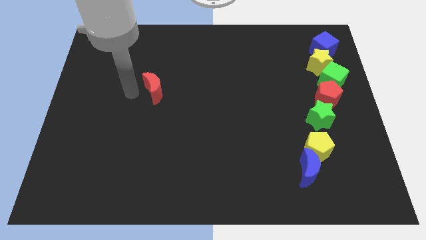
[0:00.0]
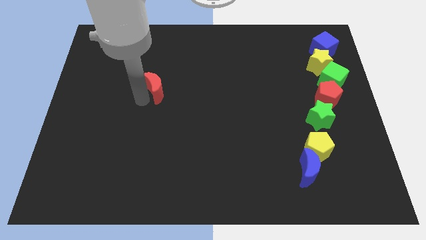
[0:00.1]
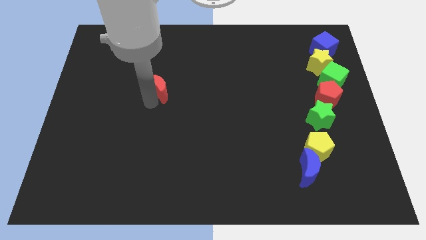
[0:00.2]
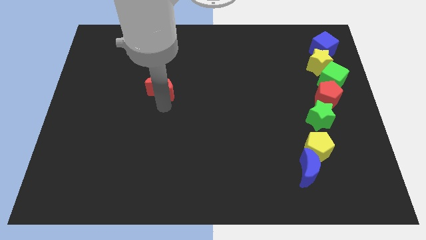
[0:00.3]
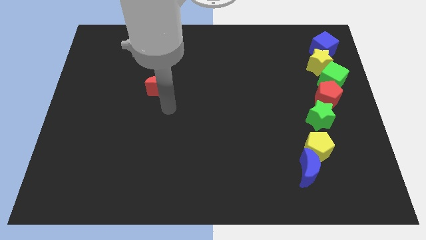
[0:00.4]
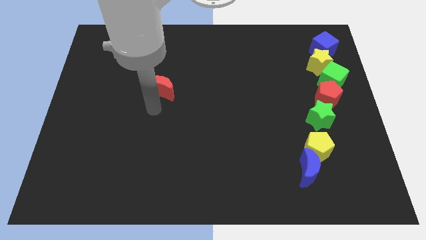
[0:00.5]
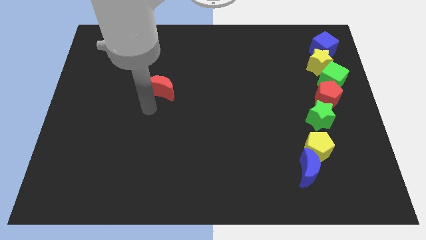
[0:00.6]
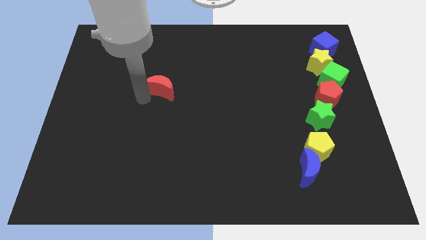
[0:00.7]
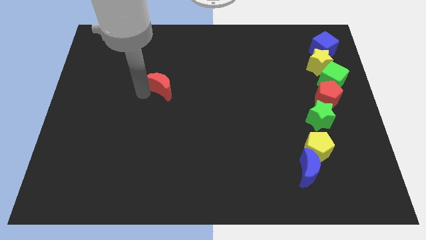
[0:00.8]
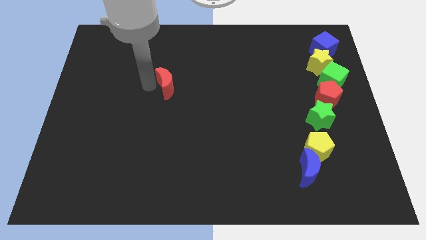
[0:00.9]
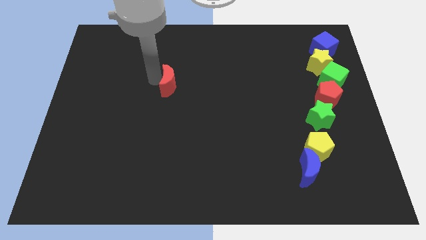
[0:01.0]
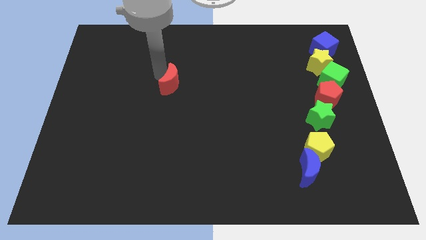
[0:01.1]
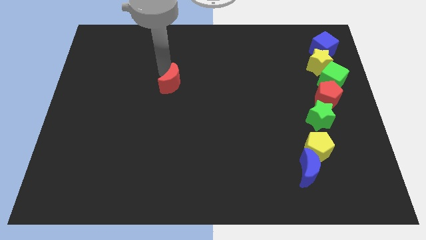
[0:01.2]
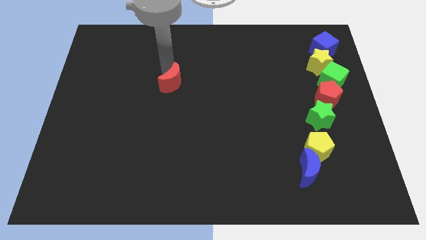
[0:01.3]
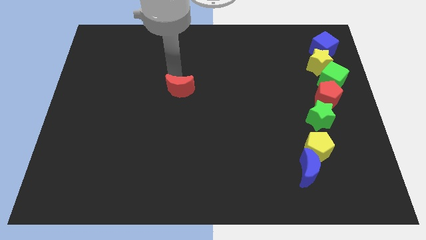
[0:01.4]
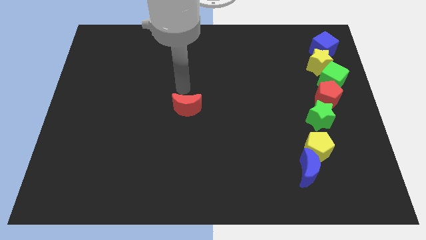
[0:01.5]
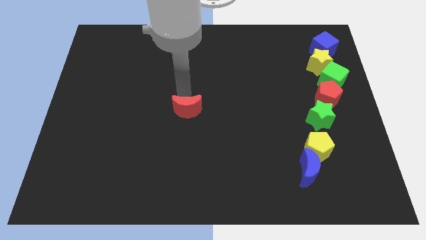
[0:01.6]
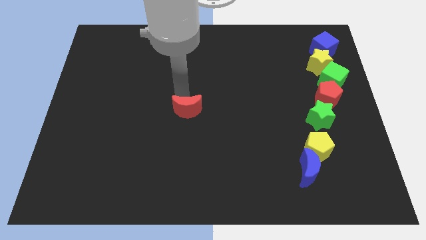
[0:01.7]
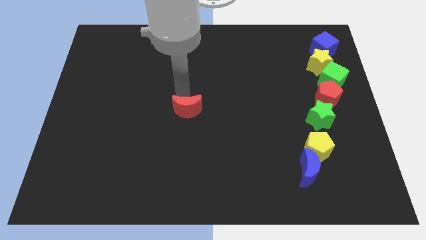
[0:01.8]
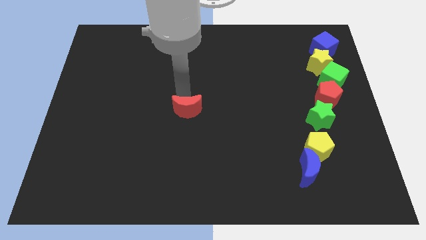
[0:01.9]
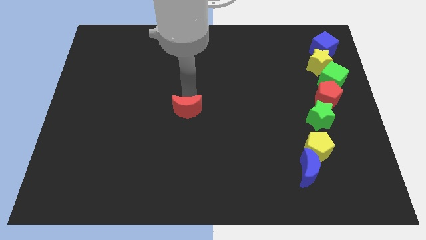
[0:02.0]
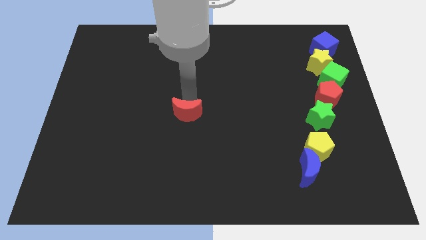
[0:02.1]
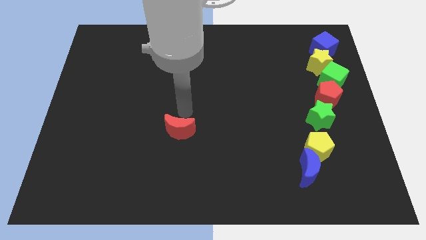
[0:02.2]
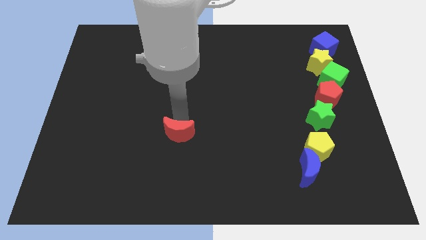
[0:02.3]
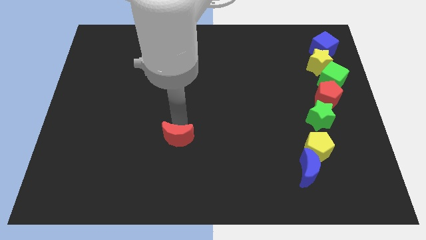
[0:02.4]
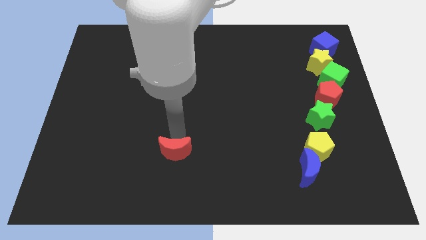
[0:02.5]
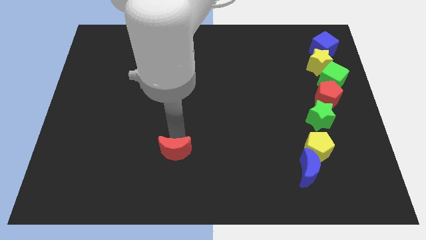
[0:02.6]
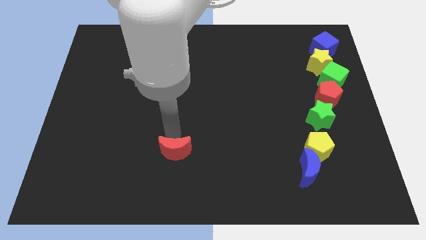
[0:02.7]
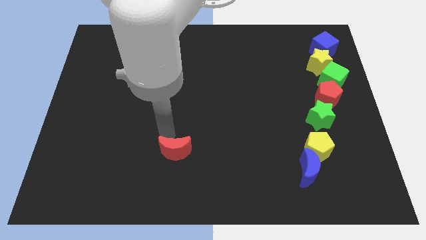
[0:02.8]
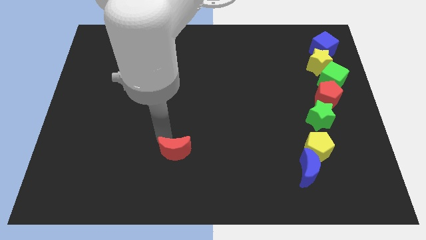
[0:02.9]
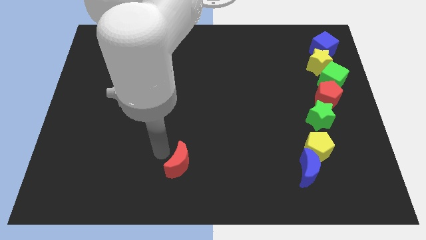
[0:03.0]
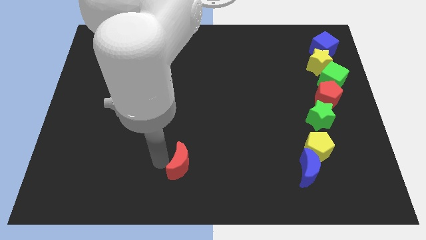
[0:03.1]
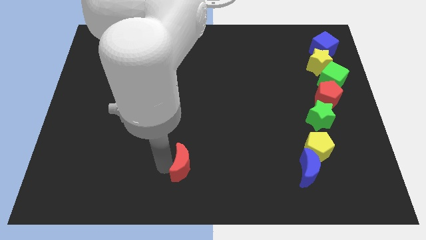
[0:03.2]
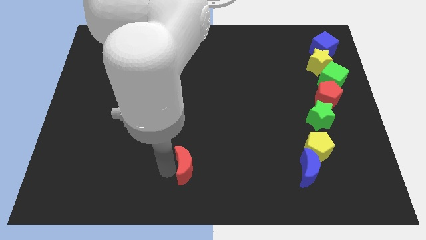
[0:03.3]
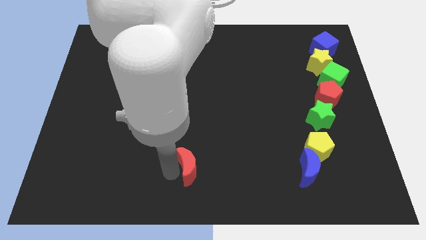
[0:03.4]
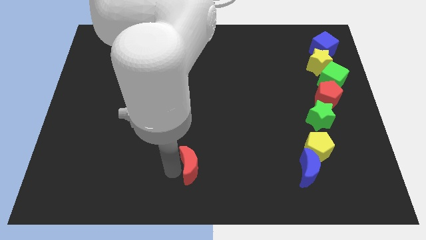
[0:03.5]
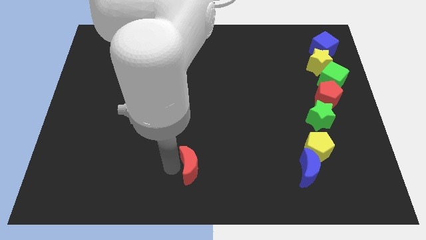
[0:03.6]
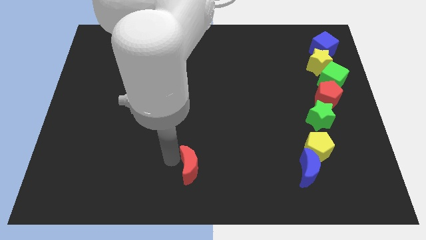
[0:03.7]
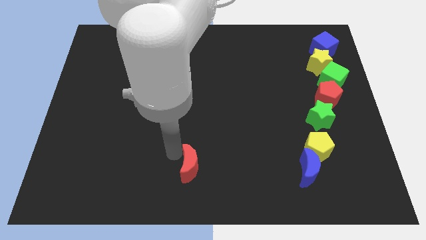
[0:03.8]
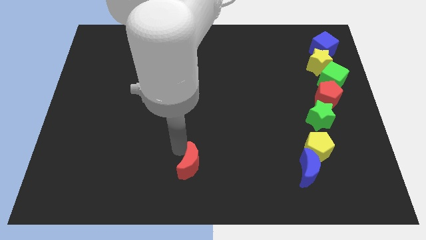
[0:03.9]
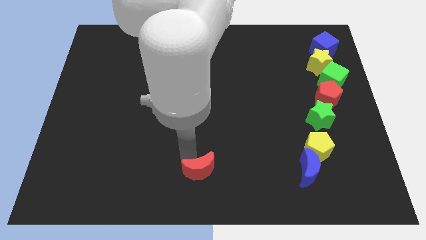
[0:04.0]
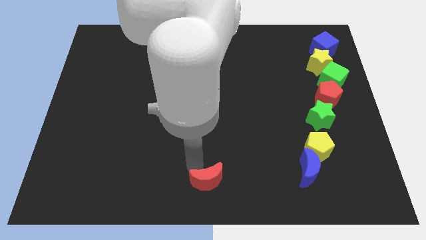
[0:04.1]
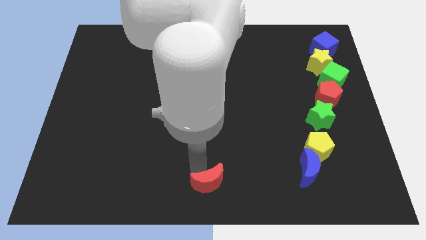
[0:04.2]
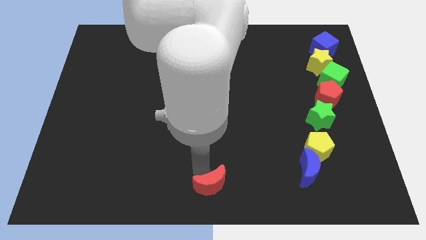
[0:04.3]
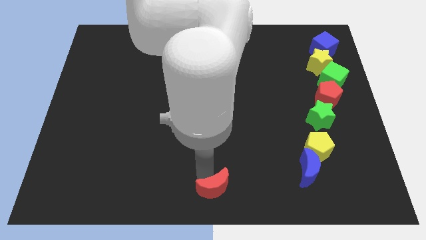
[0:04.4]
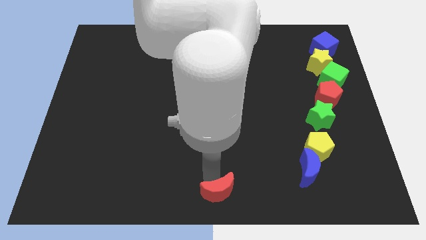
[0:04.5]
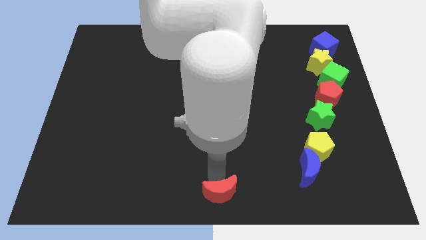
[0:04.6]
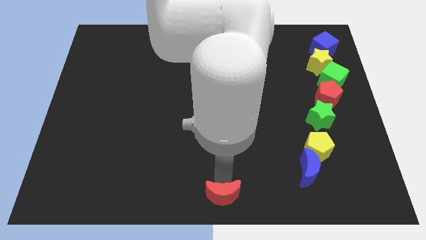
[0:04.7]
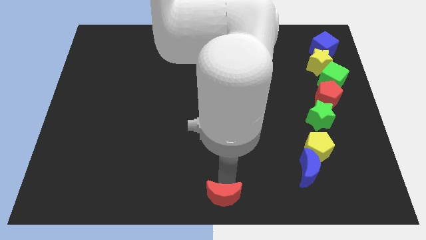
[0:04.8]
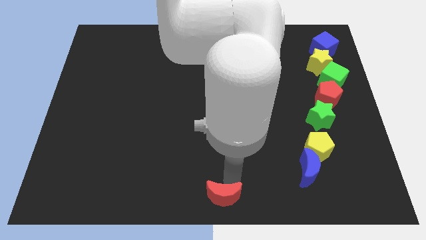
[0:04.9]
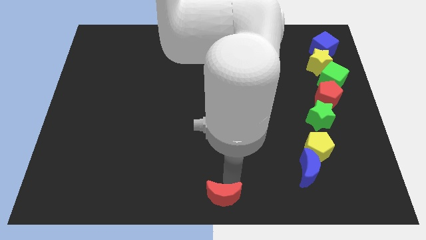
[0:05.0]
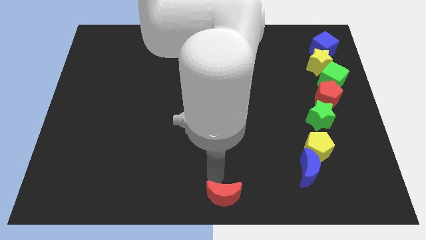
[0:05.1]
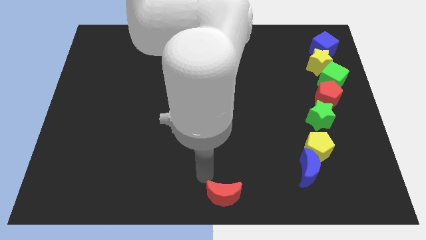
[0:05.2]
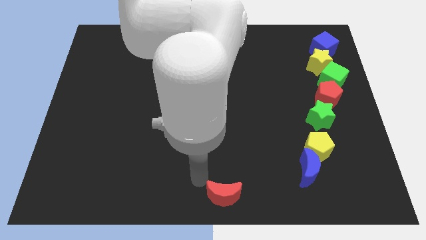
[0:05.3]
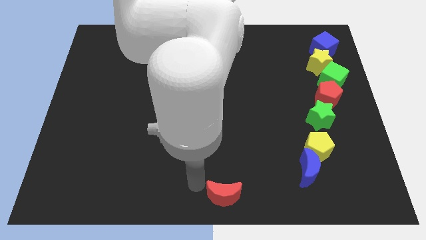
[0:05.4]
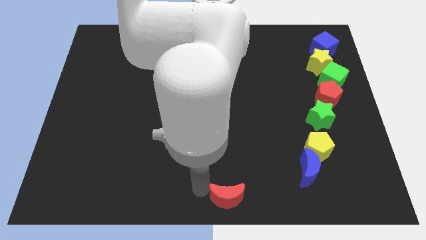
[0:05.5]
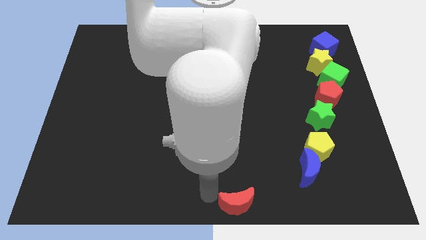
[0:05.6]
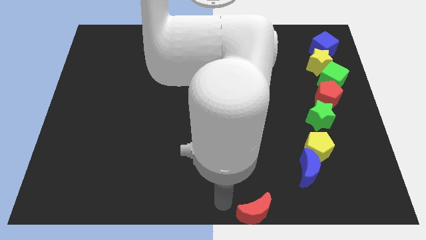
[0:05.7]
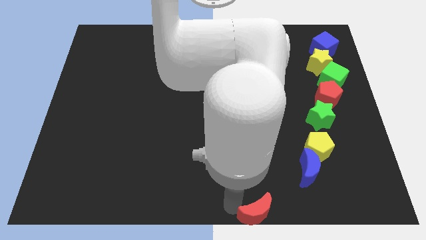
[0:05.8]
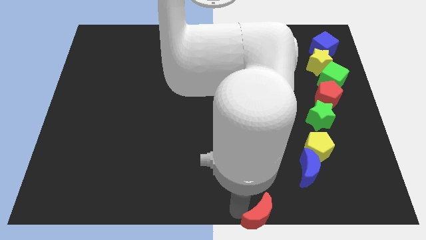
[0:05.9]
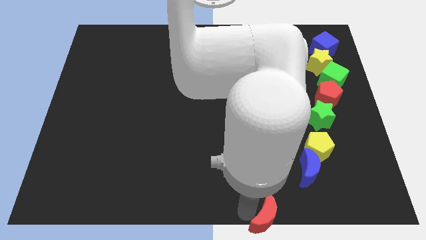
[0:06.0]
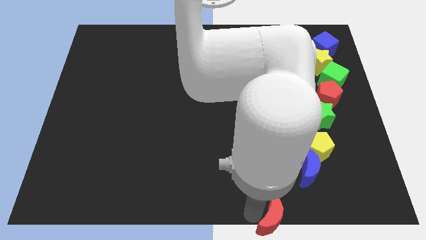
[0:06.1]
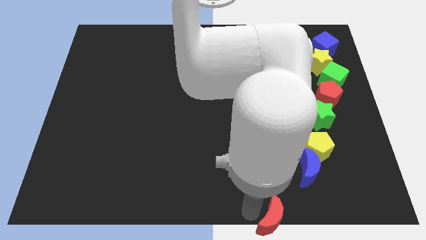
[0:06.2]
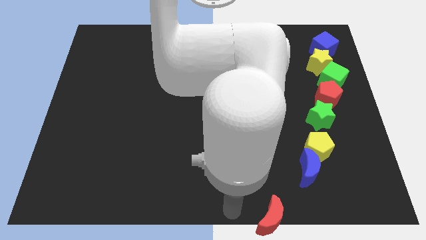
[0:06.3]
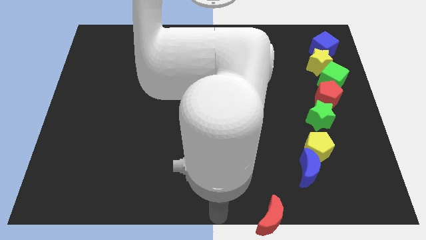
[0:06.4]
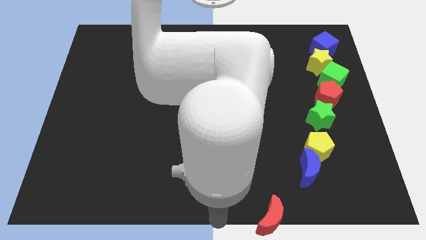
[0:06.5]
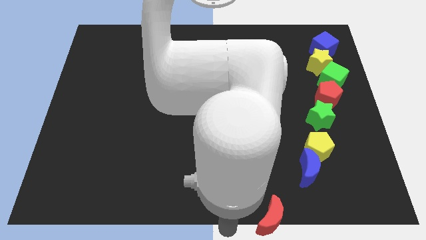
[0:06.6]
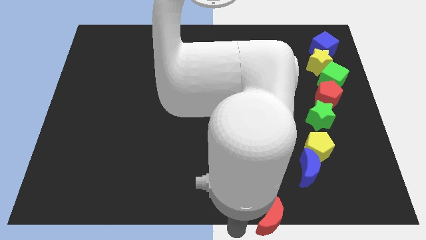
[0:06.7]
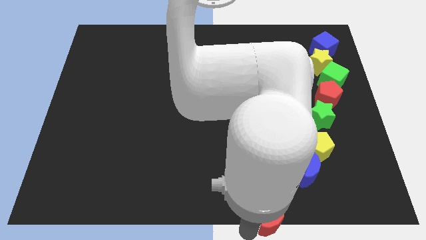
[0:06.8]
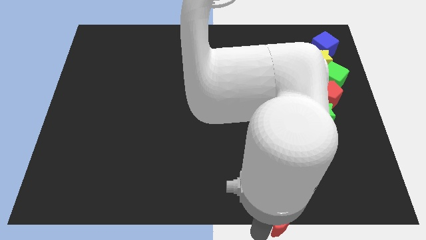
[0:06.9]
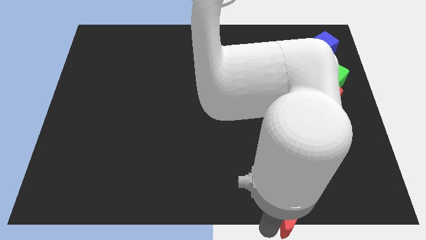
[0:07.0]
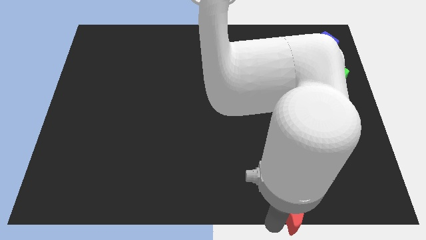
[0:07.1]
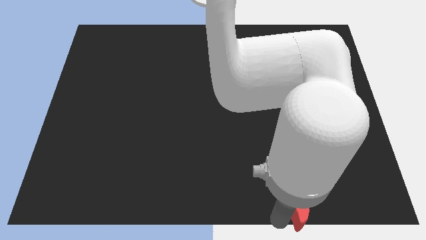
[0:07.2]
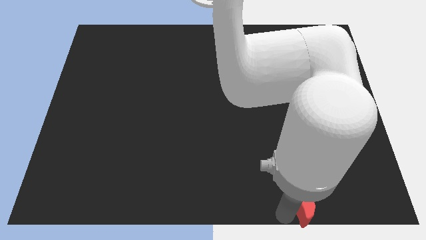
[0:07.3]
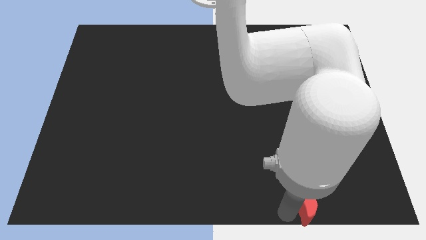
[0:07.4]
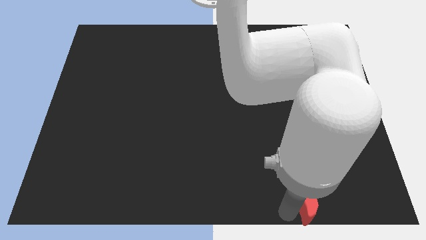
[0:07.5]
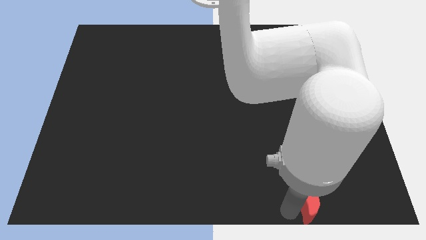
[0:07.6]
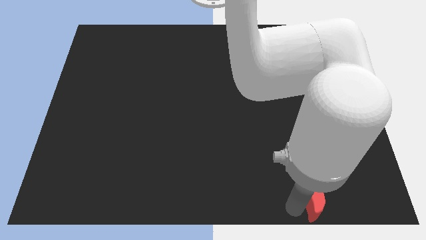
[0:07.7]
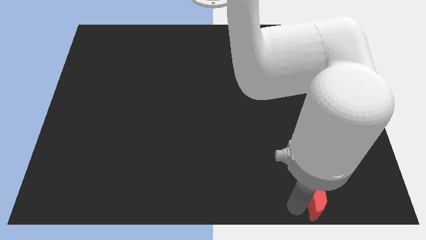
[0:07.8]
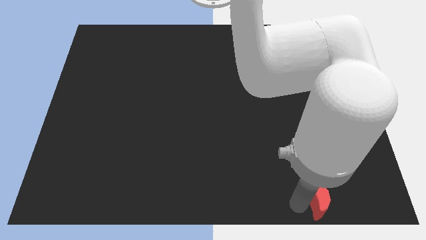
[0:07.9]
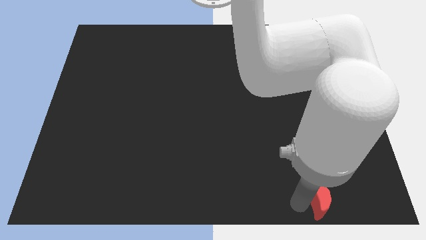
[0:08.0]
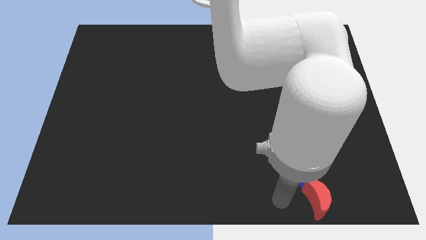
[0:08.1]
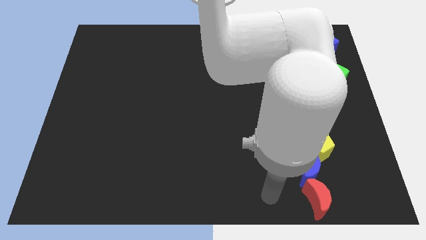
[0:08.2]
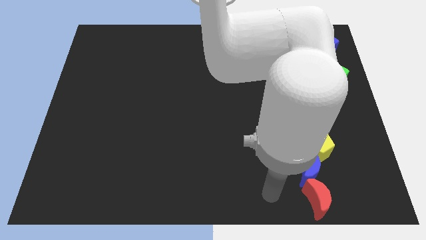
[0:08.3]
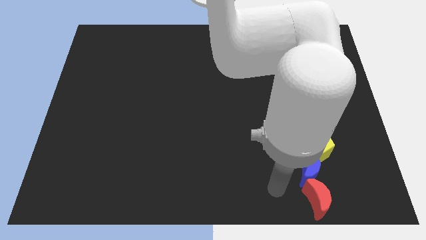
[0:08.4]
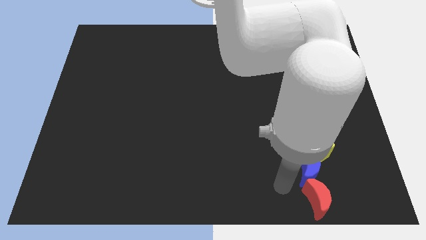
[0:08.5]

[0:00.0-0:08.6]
push the red moon to the bottom right side of the board

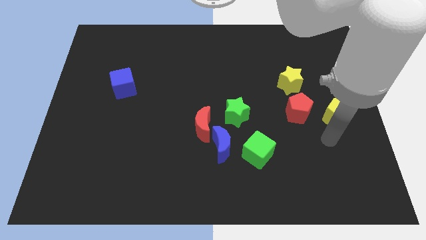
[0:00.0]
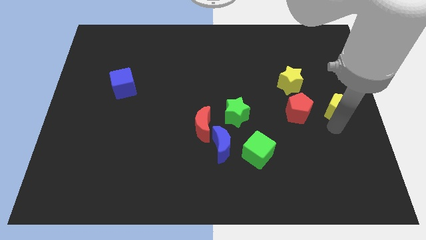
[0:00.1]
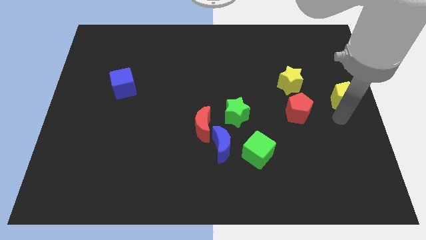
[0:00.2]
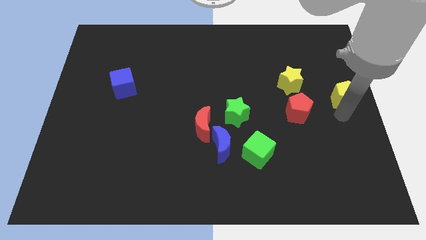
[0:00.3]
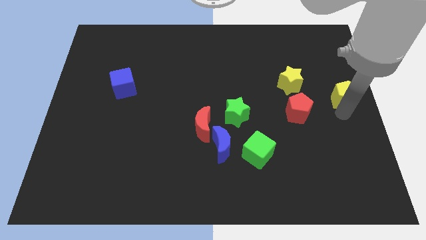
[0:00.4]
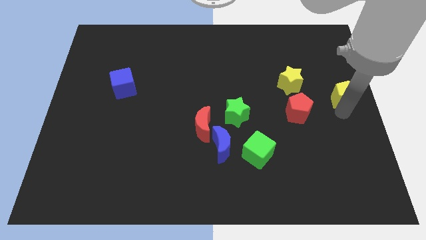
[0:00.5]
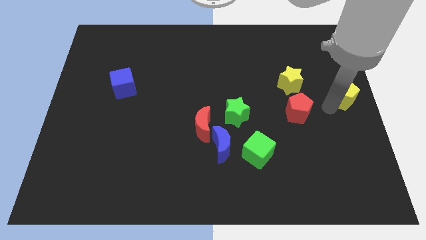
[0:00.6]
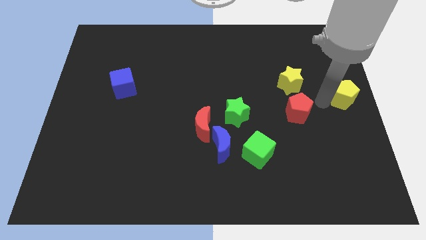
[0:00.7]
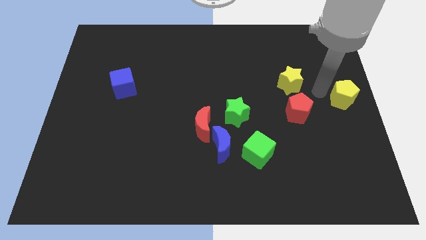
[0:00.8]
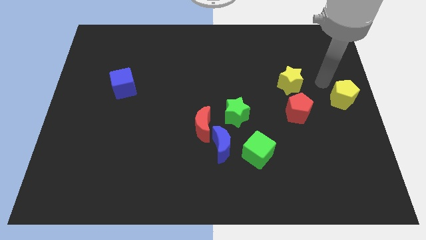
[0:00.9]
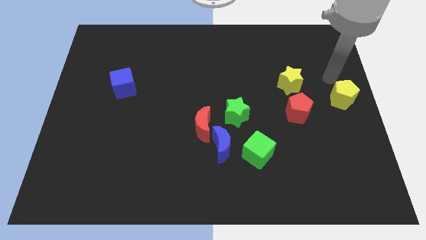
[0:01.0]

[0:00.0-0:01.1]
slide the yellow pentagon slightly upwards
